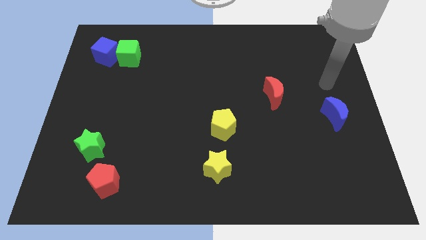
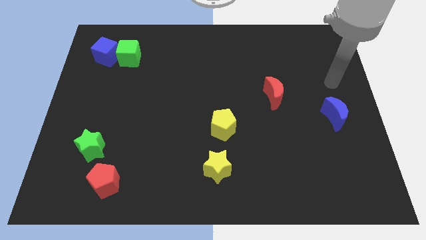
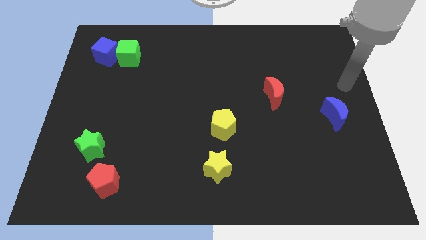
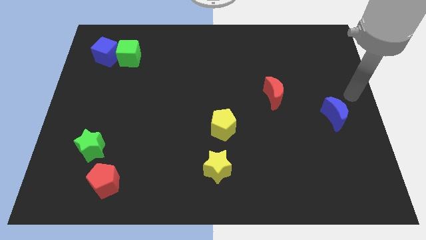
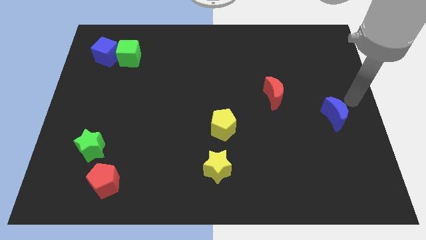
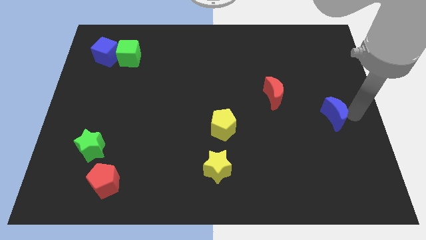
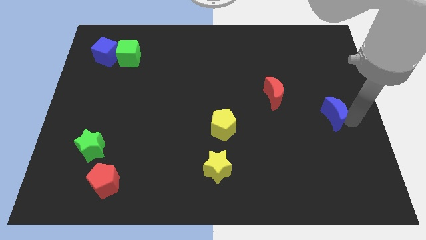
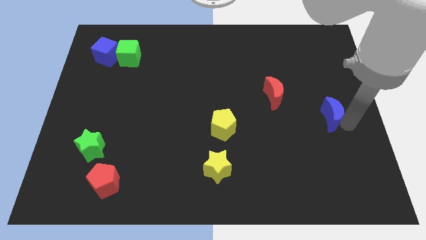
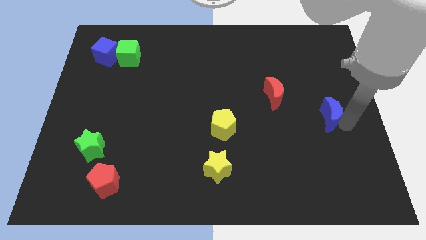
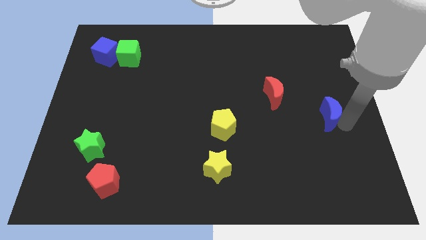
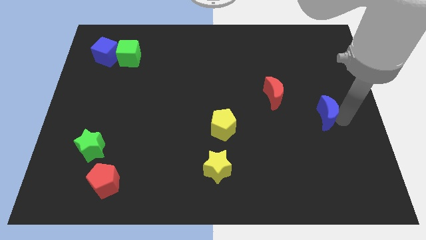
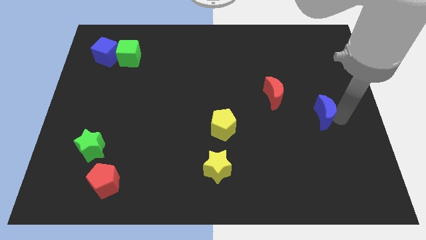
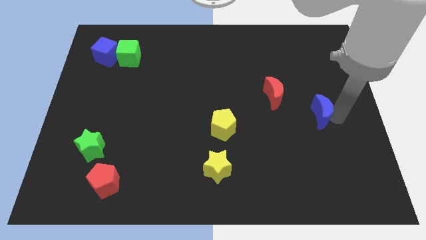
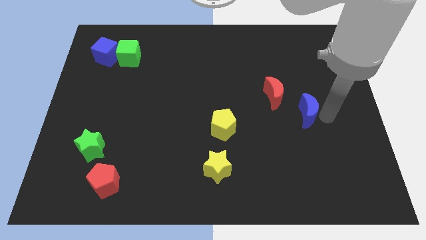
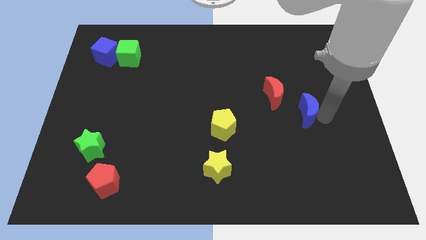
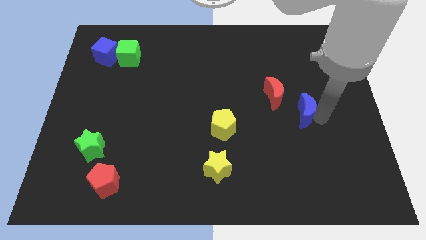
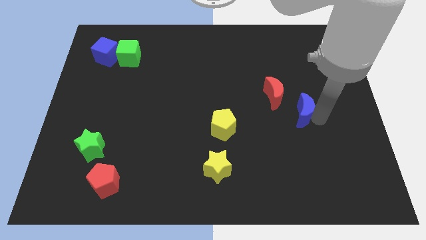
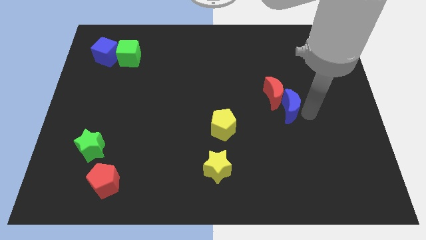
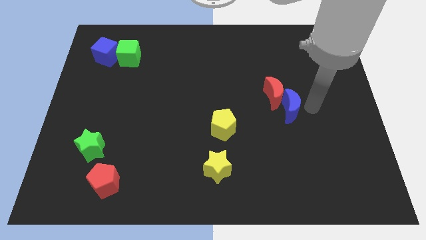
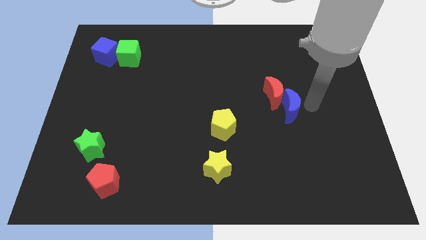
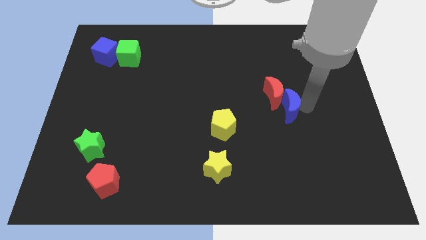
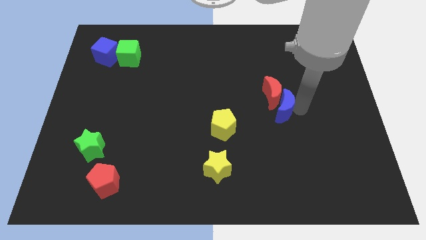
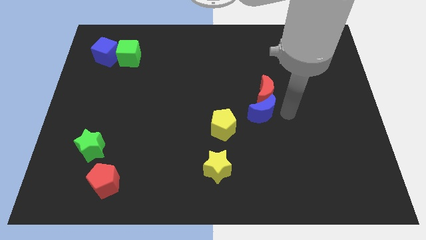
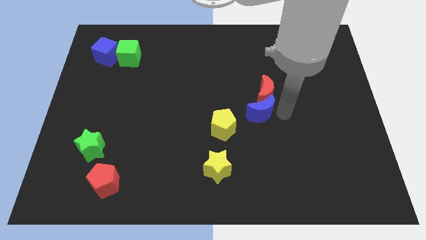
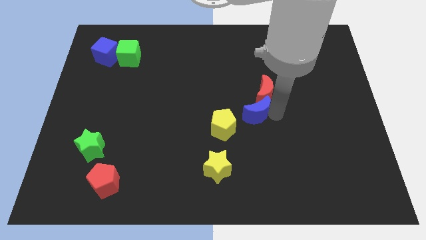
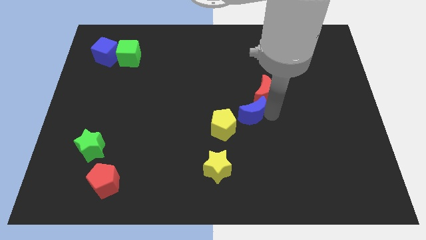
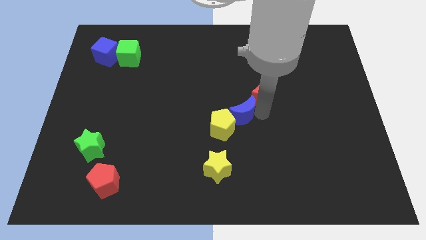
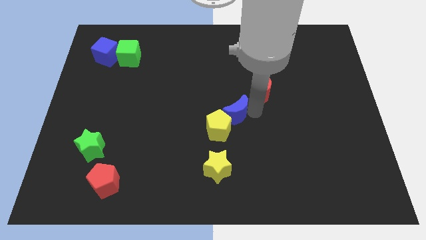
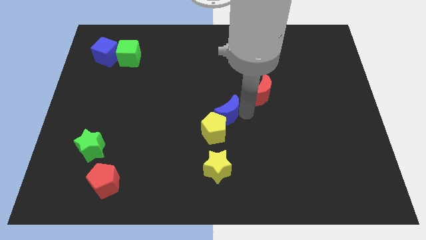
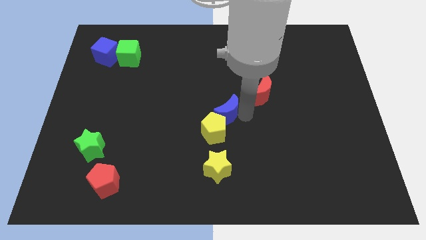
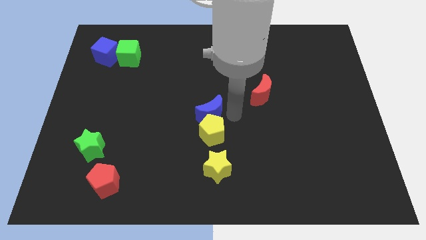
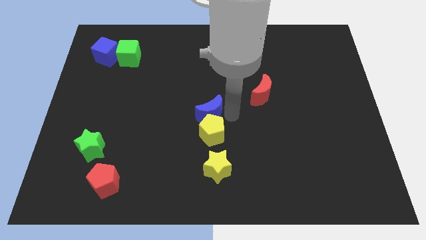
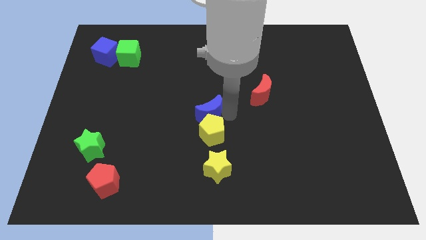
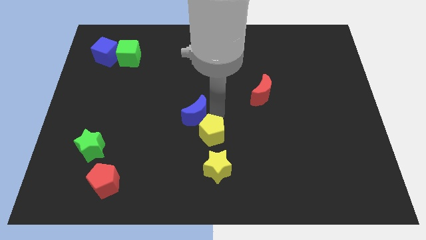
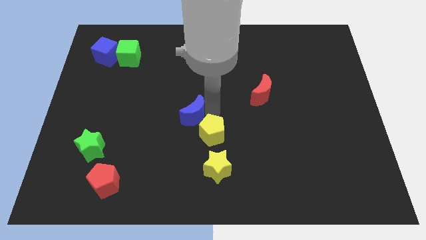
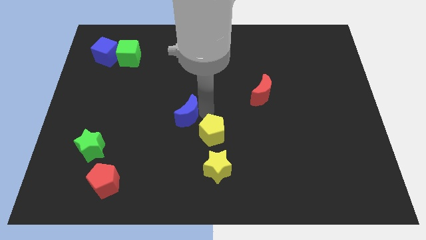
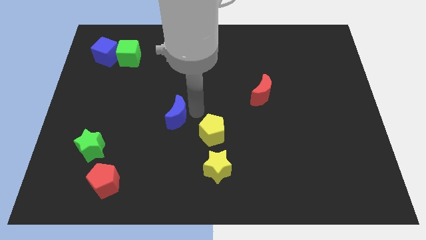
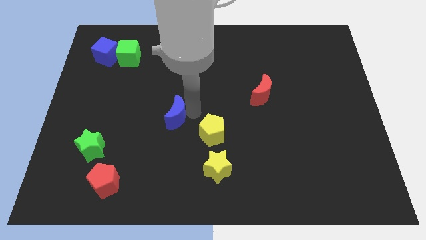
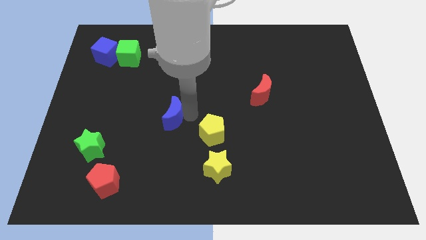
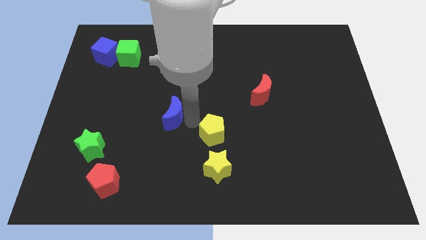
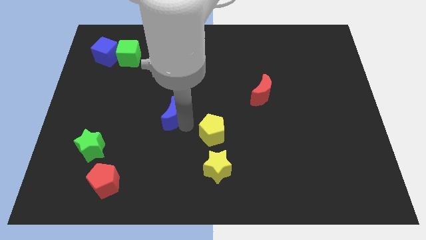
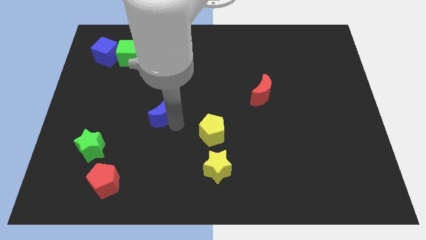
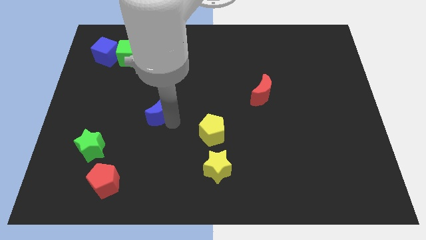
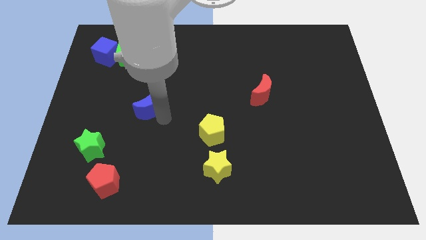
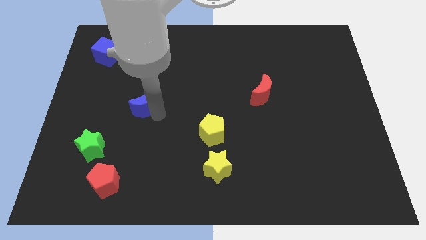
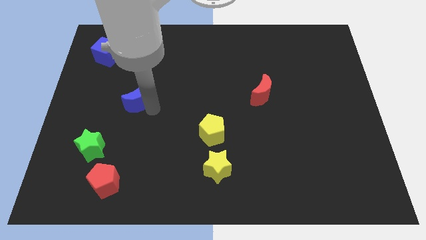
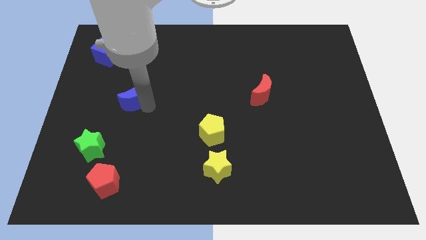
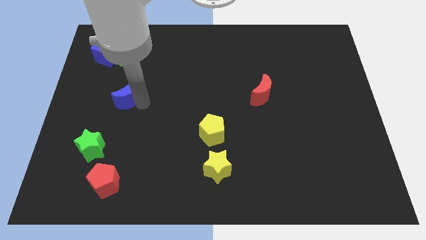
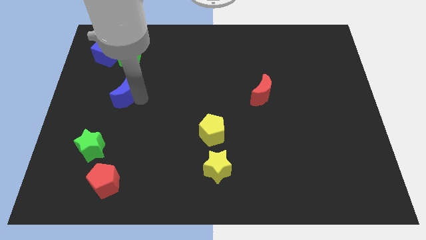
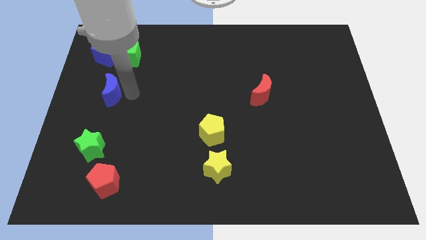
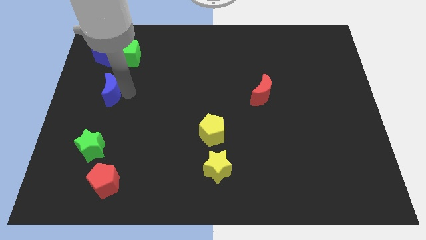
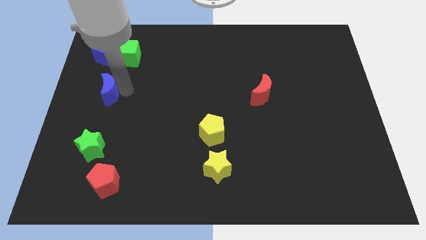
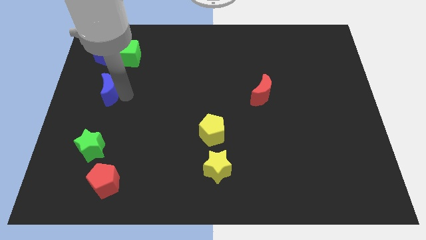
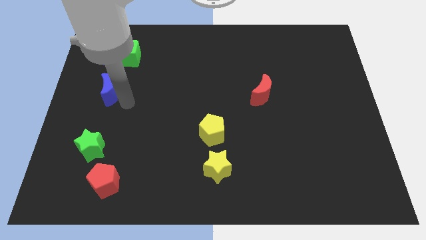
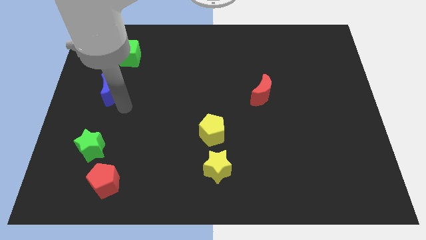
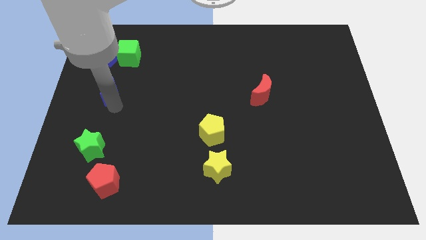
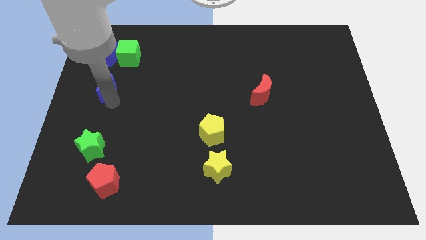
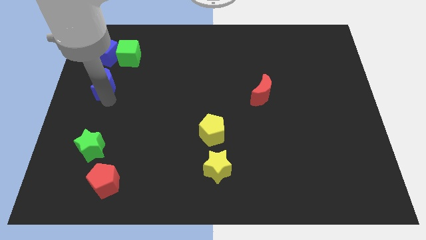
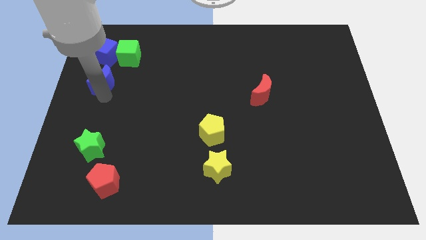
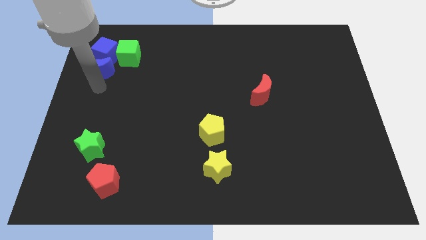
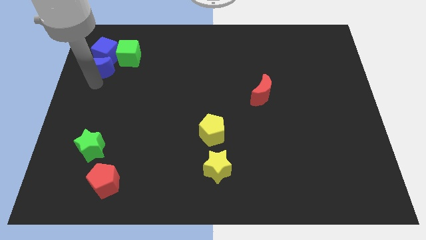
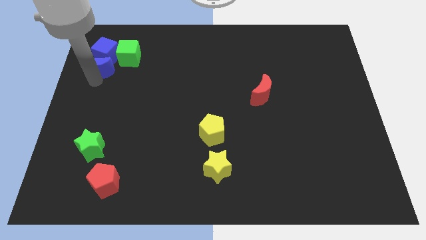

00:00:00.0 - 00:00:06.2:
slide the blue moon to the blue cube

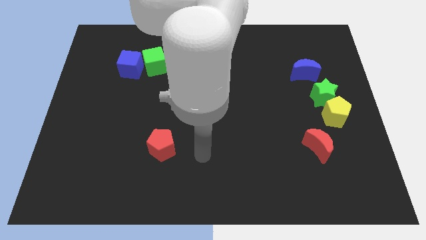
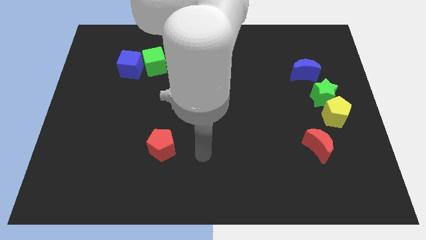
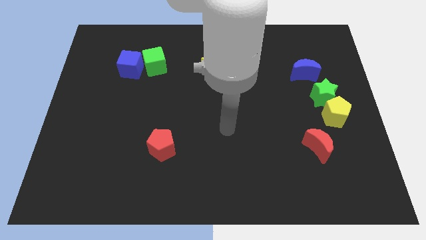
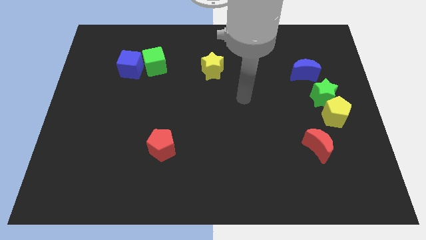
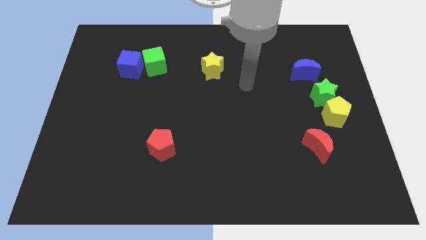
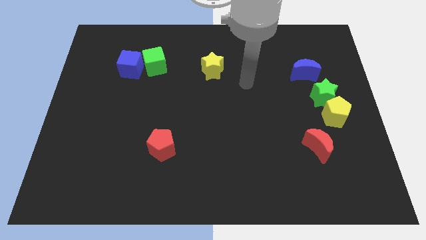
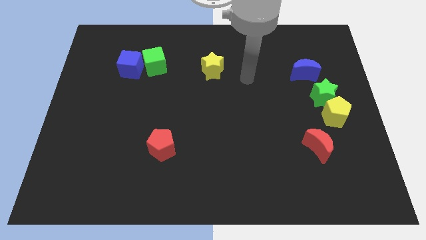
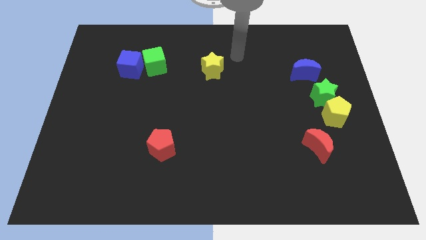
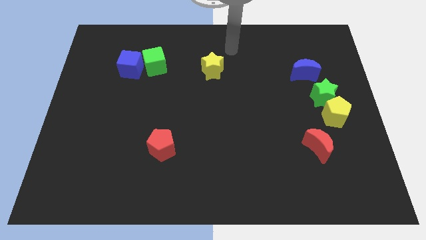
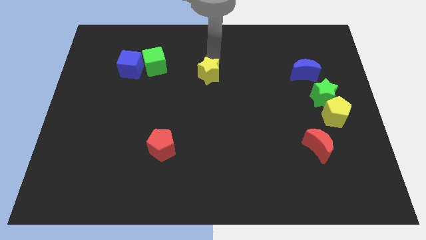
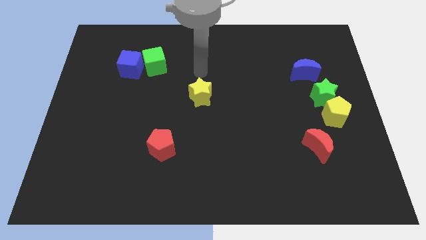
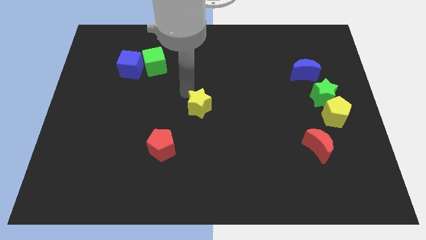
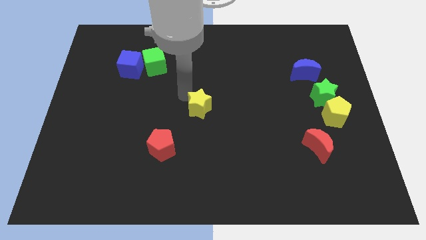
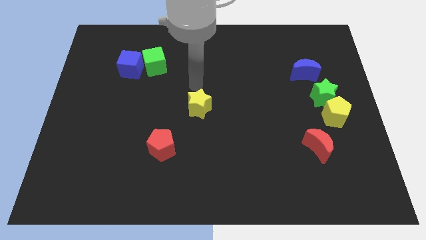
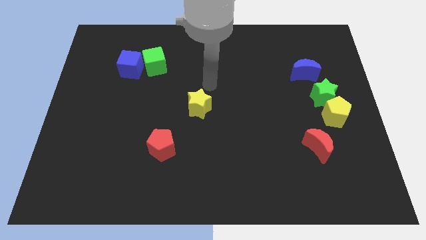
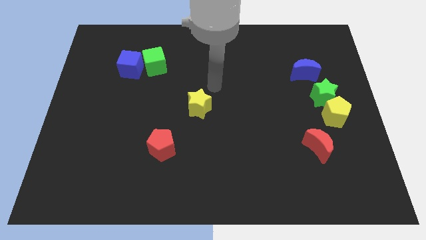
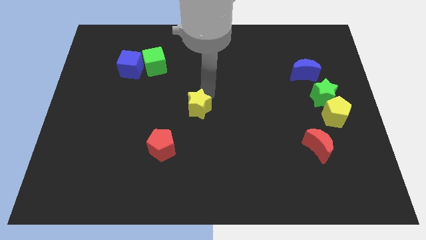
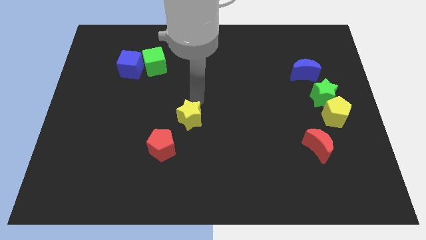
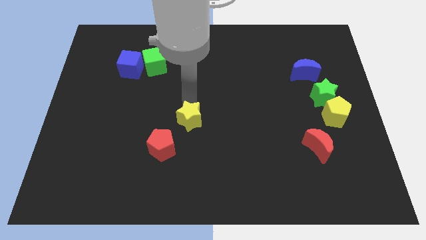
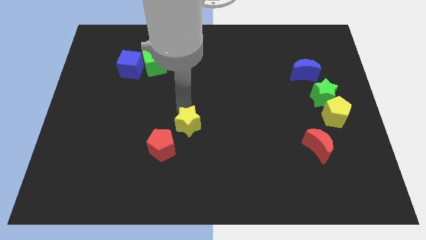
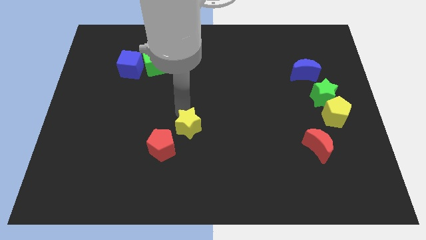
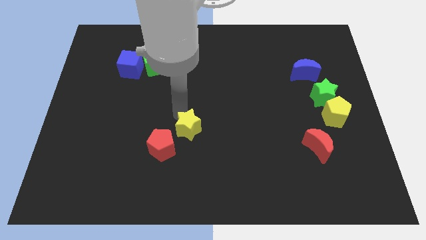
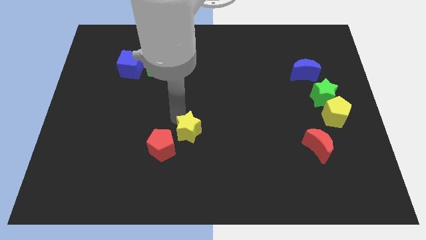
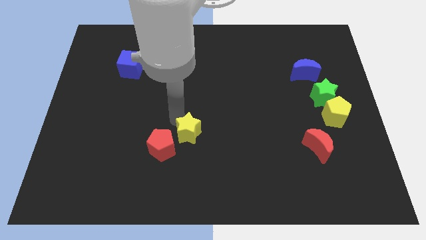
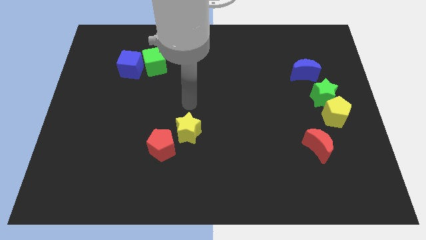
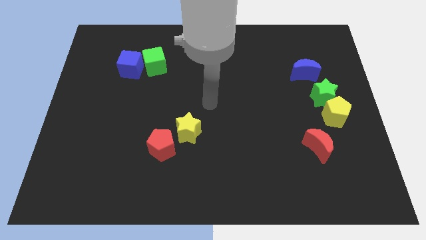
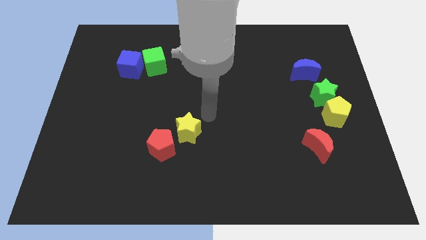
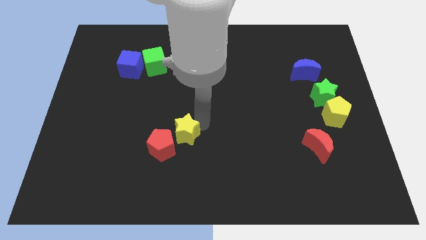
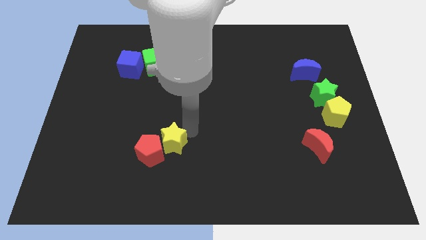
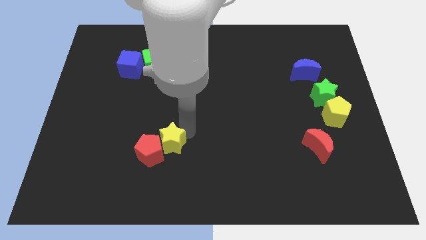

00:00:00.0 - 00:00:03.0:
push the yellow star close to the red pentagon
